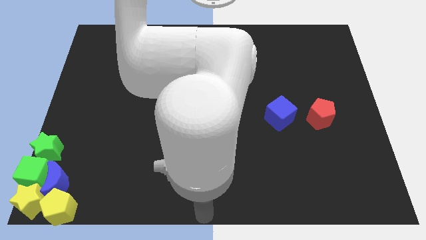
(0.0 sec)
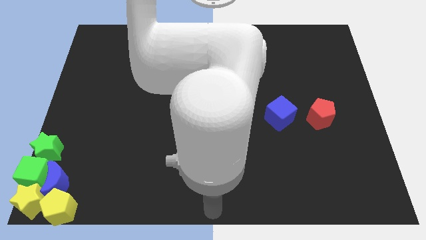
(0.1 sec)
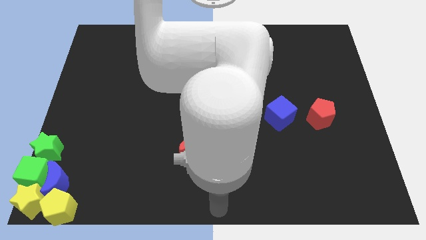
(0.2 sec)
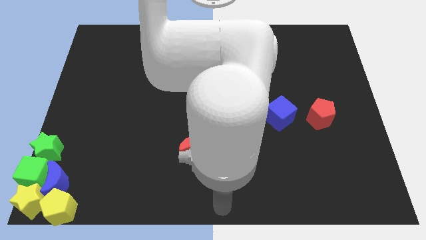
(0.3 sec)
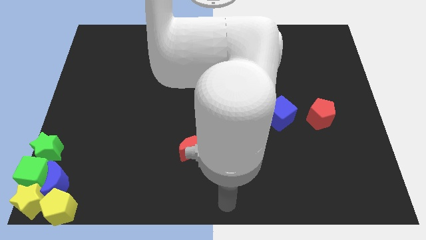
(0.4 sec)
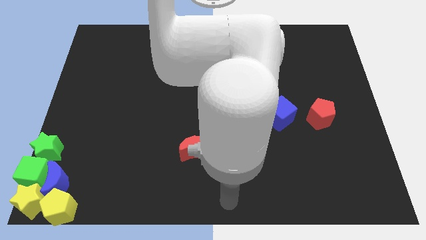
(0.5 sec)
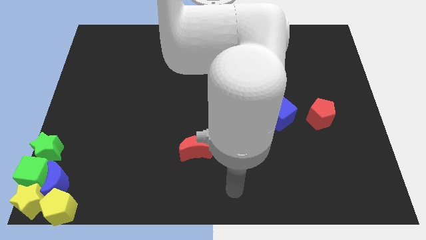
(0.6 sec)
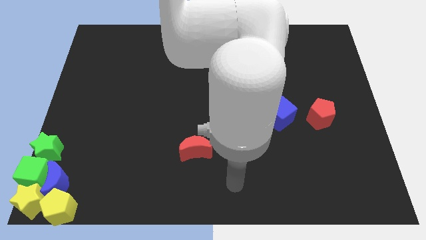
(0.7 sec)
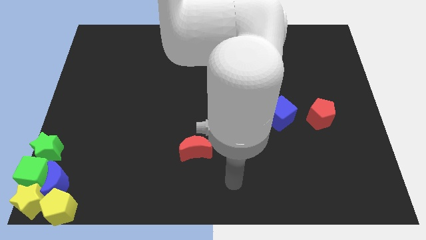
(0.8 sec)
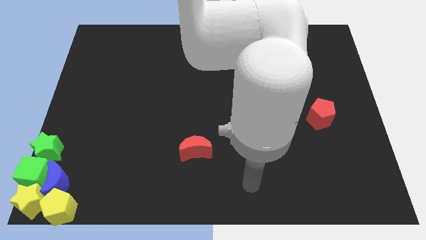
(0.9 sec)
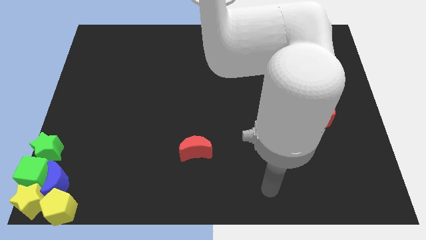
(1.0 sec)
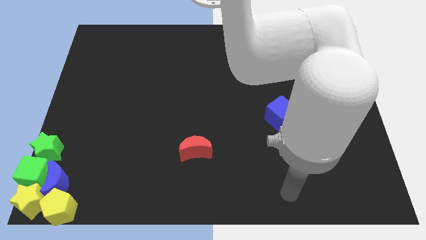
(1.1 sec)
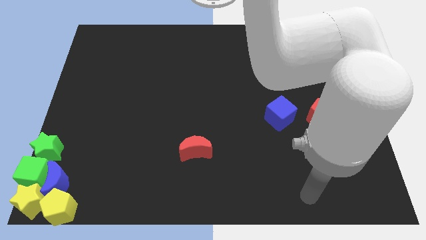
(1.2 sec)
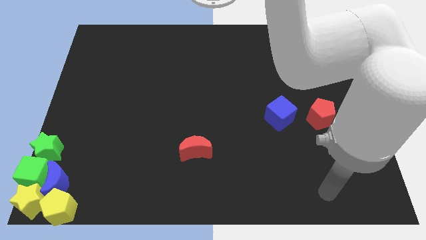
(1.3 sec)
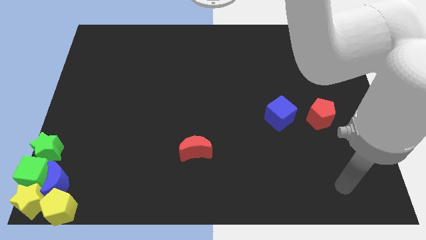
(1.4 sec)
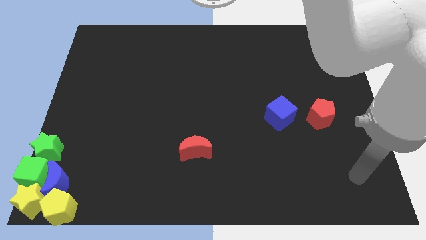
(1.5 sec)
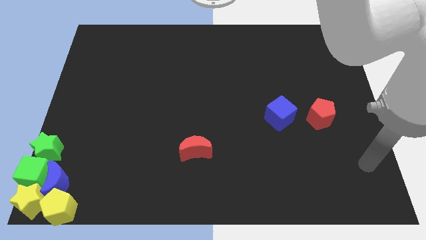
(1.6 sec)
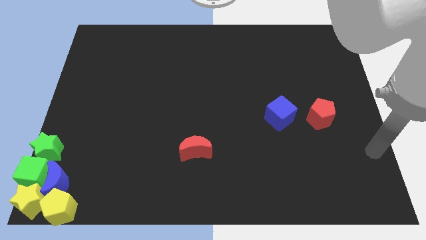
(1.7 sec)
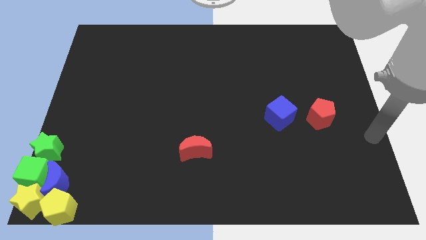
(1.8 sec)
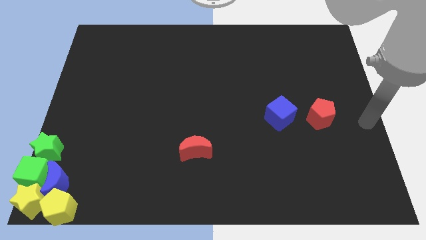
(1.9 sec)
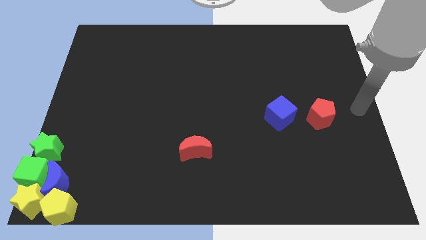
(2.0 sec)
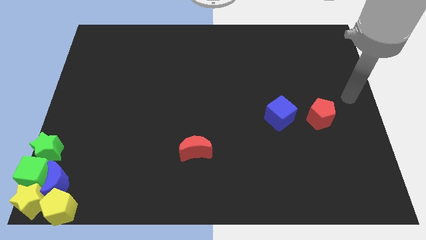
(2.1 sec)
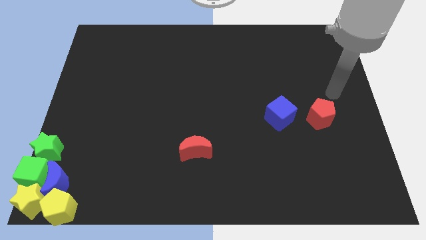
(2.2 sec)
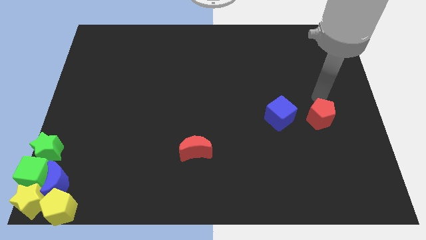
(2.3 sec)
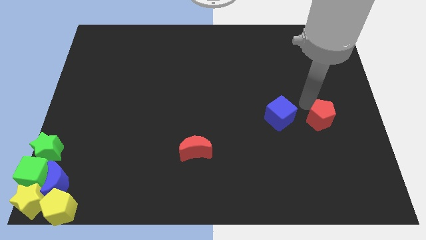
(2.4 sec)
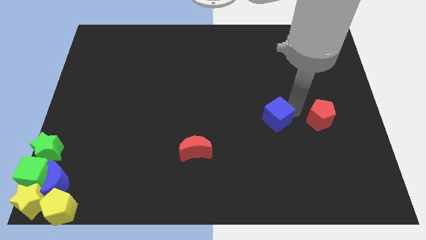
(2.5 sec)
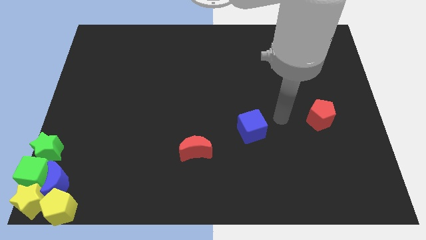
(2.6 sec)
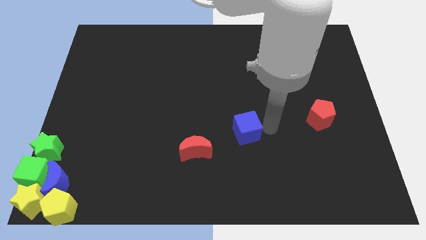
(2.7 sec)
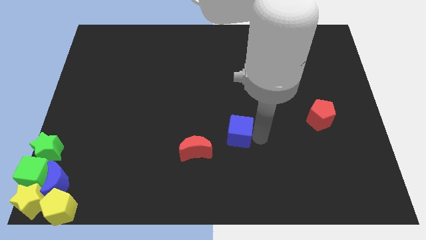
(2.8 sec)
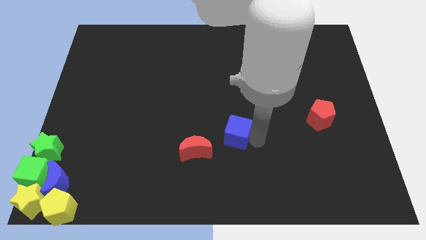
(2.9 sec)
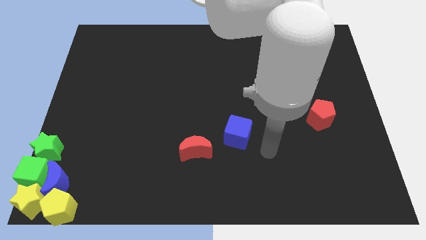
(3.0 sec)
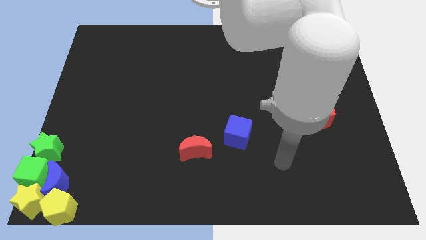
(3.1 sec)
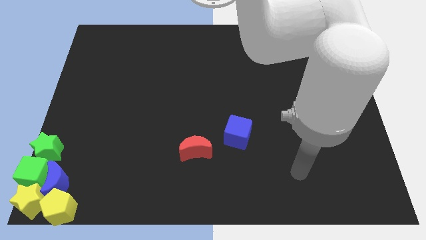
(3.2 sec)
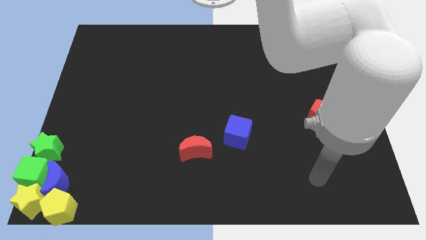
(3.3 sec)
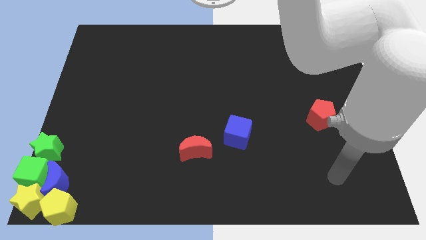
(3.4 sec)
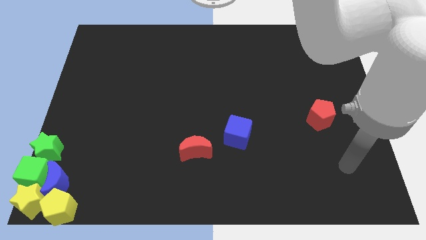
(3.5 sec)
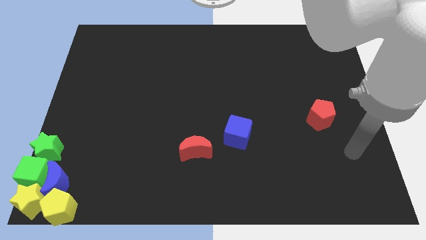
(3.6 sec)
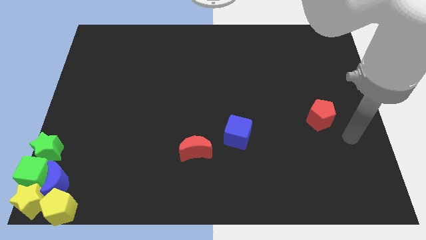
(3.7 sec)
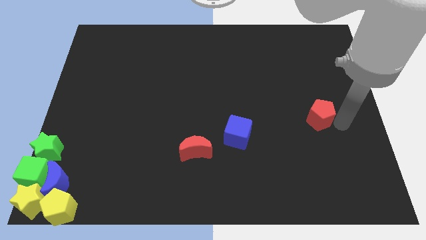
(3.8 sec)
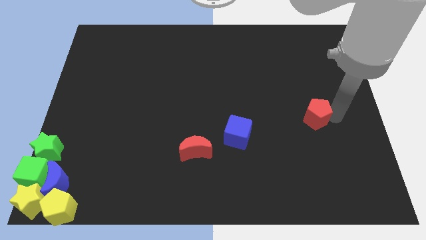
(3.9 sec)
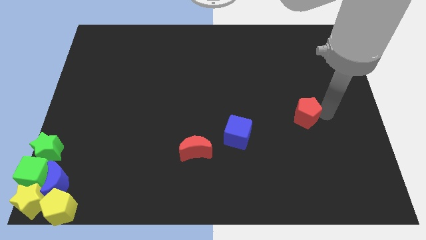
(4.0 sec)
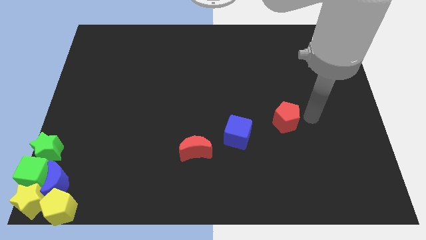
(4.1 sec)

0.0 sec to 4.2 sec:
move the blue cube close to the red moon

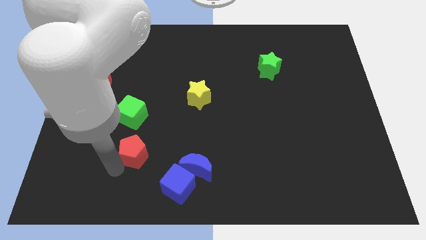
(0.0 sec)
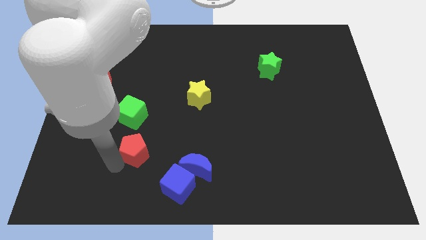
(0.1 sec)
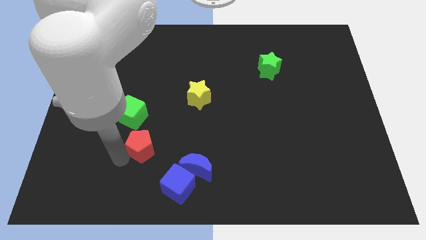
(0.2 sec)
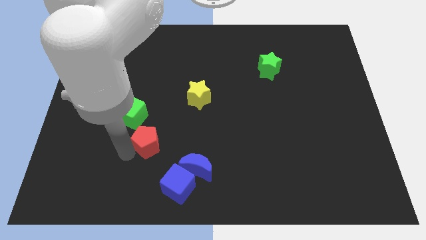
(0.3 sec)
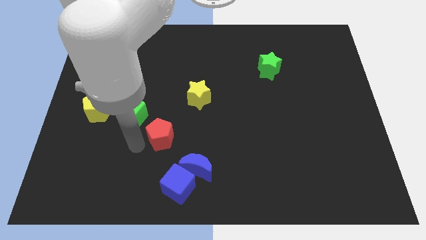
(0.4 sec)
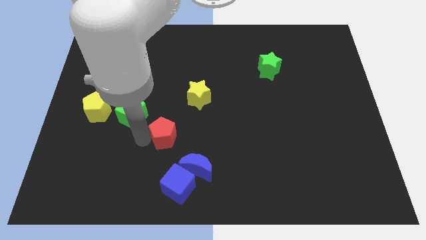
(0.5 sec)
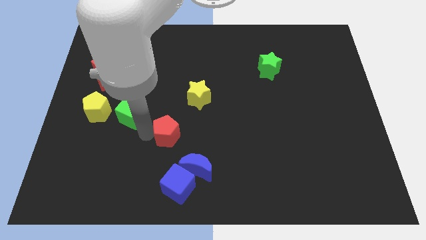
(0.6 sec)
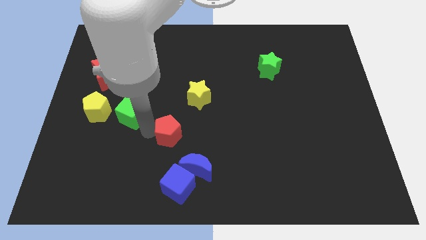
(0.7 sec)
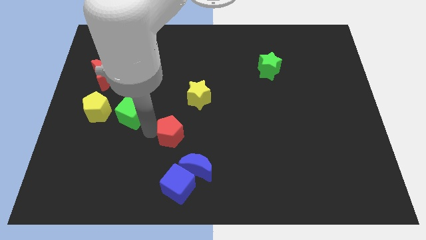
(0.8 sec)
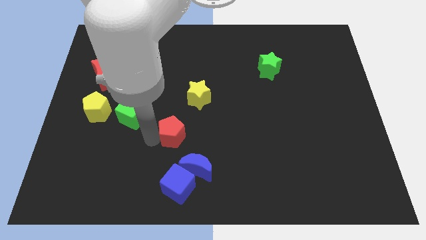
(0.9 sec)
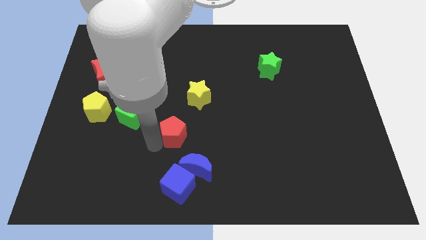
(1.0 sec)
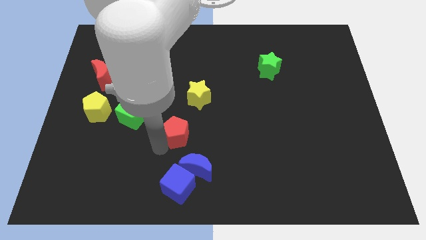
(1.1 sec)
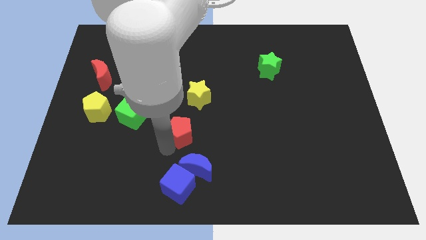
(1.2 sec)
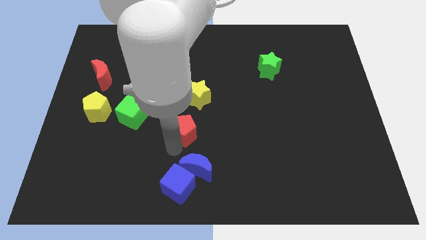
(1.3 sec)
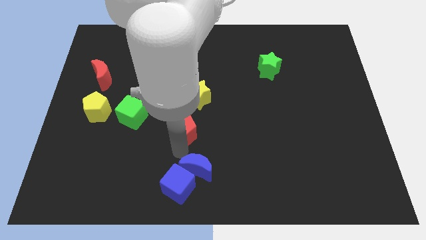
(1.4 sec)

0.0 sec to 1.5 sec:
push the red pentagon slightly upwards

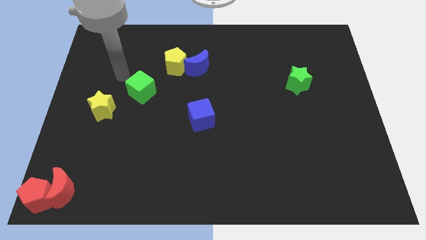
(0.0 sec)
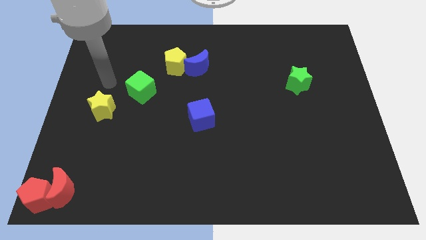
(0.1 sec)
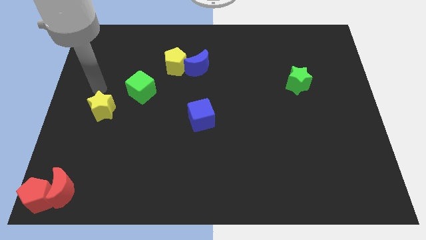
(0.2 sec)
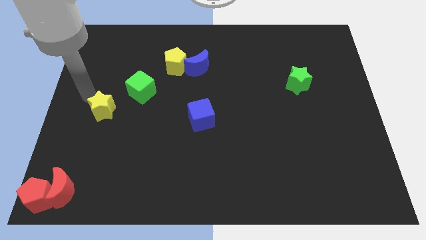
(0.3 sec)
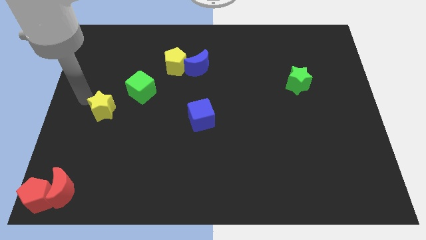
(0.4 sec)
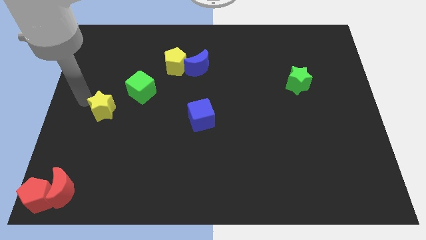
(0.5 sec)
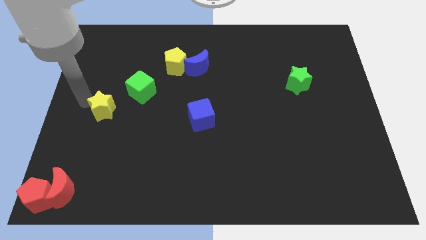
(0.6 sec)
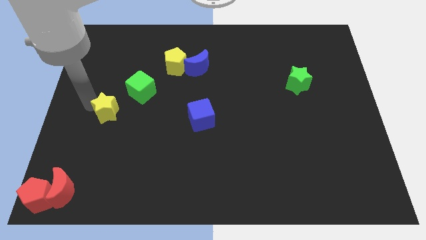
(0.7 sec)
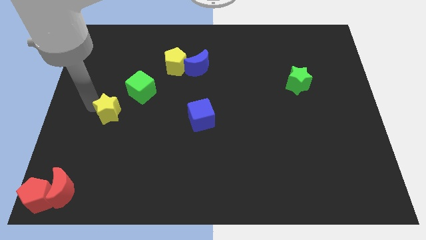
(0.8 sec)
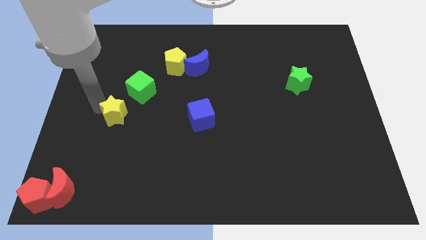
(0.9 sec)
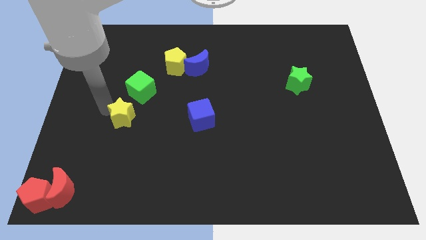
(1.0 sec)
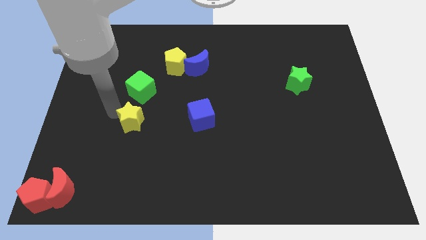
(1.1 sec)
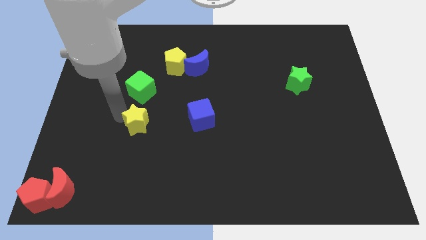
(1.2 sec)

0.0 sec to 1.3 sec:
put the yellow star vertically below the green cube

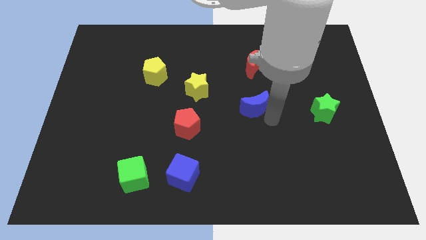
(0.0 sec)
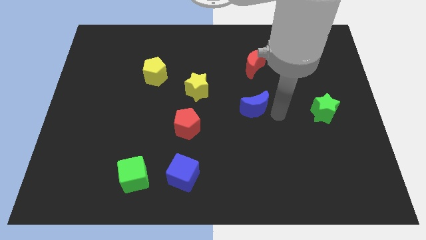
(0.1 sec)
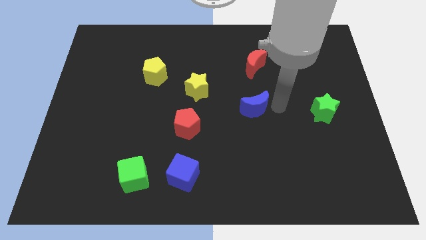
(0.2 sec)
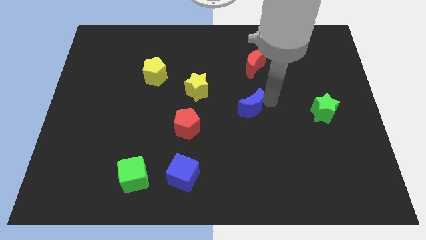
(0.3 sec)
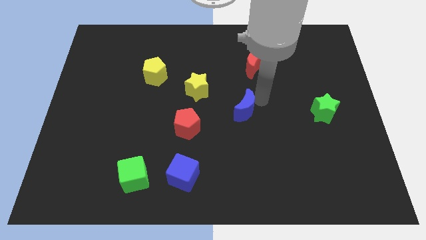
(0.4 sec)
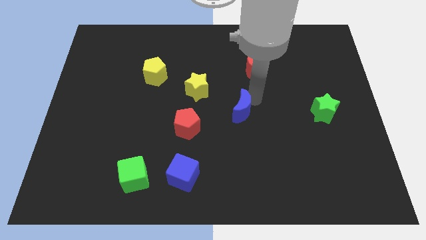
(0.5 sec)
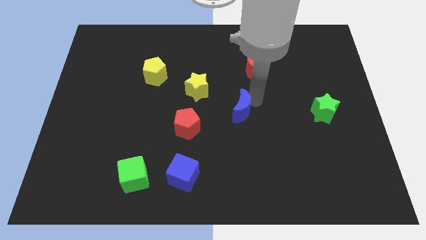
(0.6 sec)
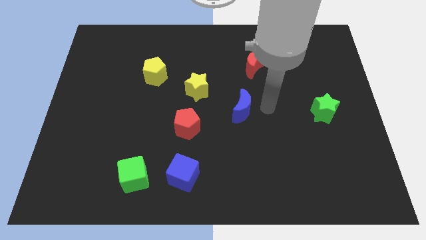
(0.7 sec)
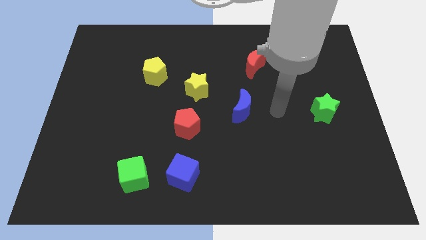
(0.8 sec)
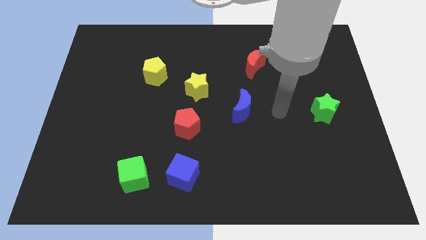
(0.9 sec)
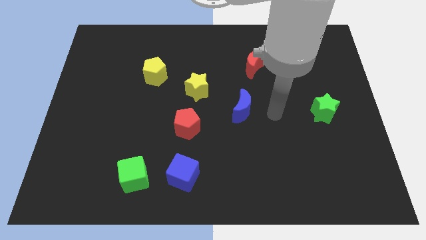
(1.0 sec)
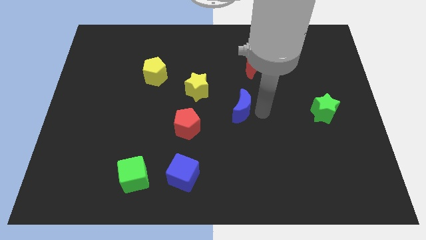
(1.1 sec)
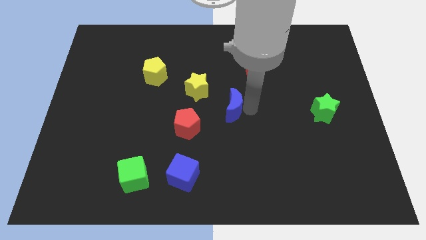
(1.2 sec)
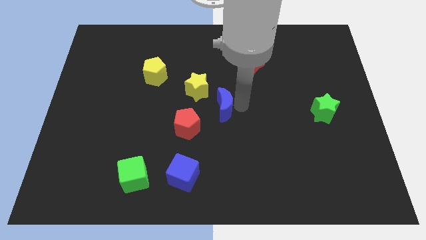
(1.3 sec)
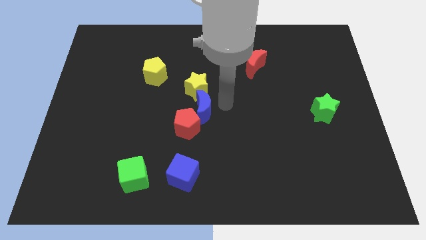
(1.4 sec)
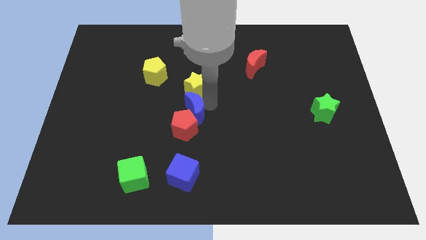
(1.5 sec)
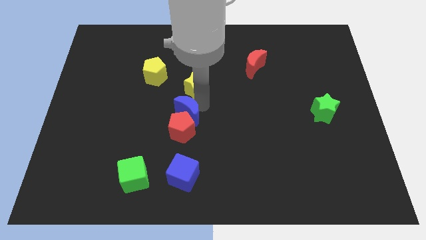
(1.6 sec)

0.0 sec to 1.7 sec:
place blue moon in between yellow star and red pentagon

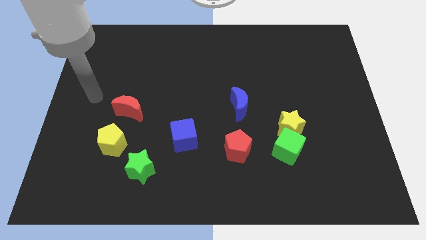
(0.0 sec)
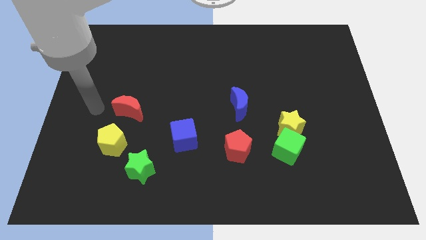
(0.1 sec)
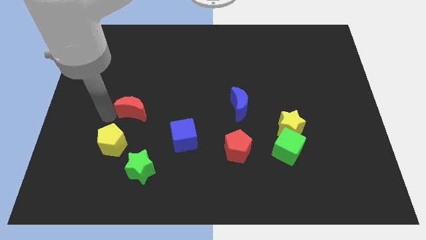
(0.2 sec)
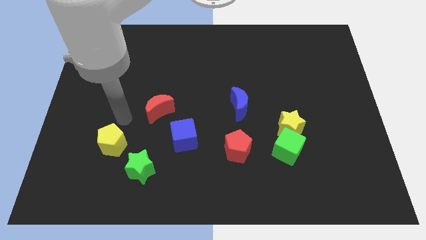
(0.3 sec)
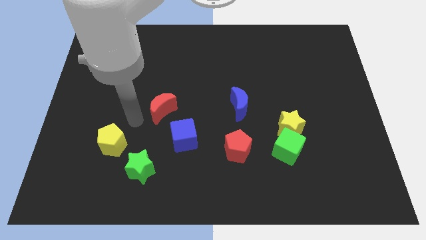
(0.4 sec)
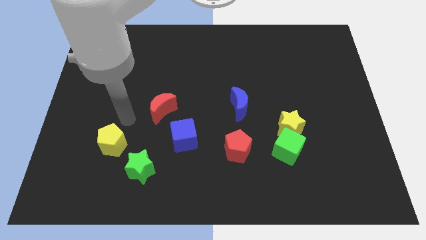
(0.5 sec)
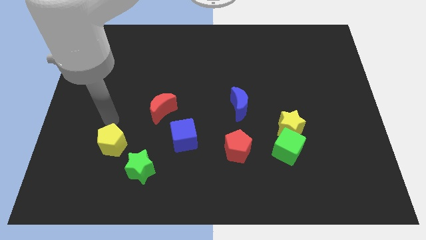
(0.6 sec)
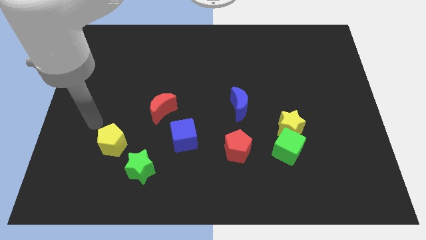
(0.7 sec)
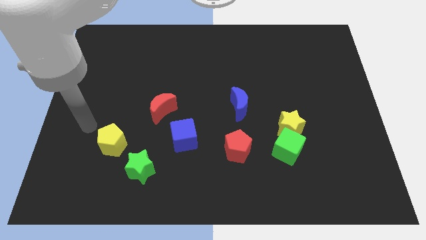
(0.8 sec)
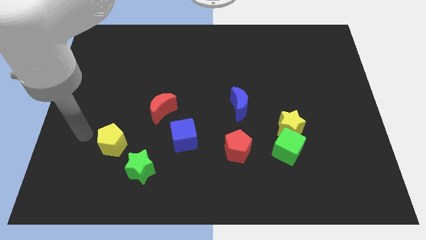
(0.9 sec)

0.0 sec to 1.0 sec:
place the red moon above the blue cube
